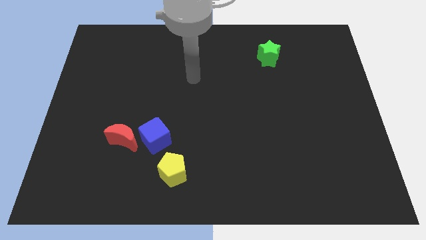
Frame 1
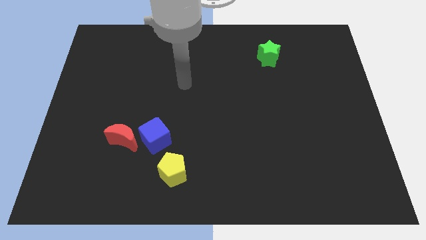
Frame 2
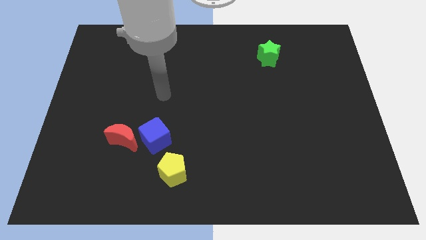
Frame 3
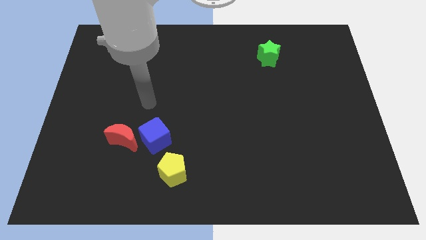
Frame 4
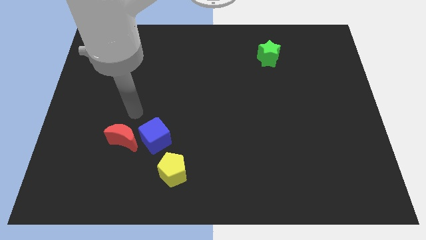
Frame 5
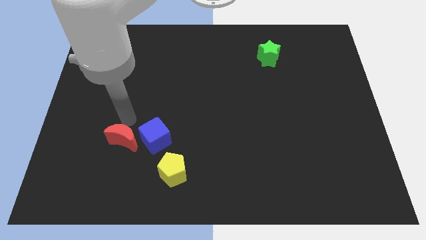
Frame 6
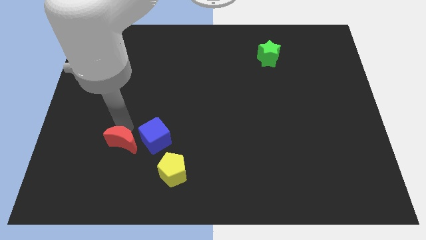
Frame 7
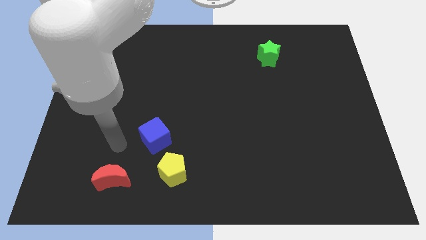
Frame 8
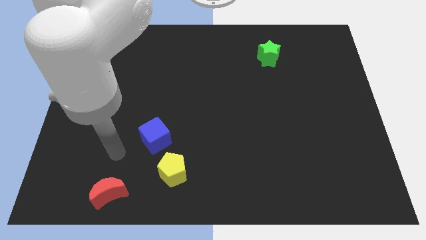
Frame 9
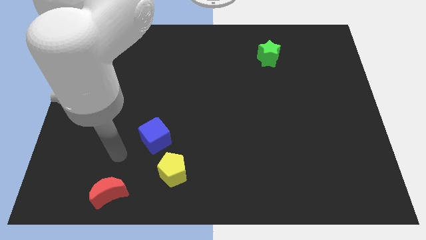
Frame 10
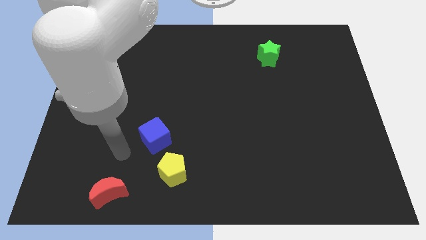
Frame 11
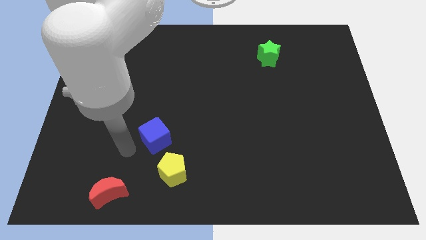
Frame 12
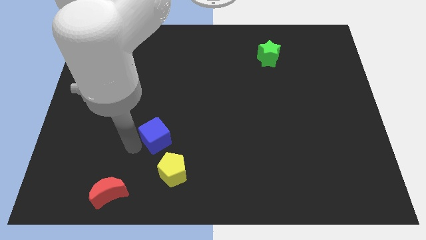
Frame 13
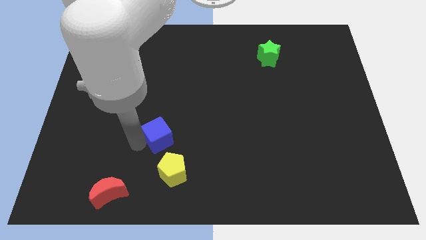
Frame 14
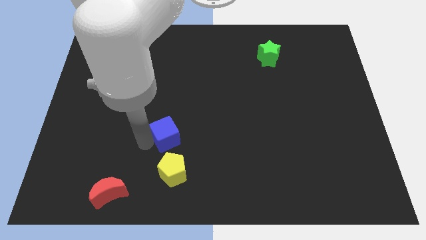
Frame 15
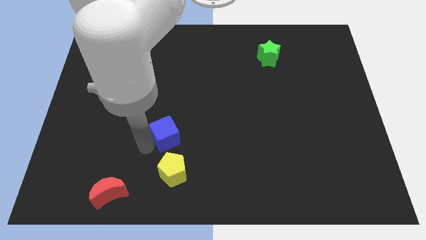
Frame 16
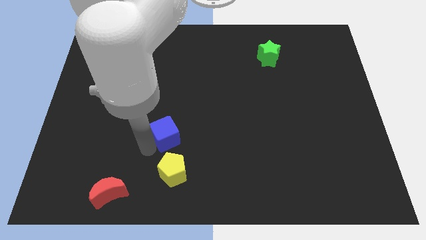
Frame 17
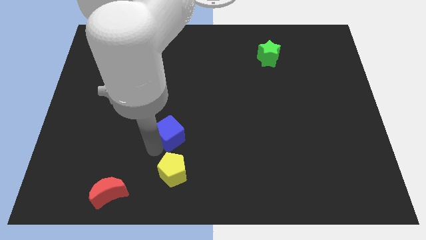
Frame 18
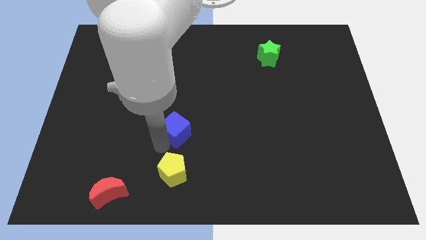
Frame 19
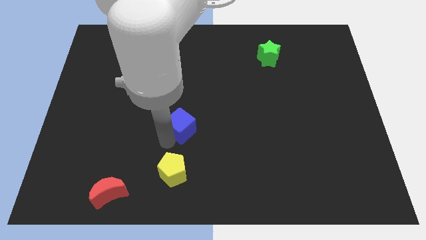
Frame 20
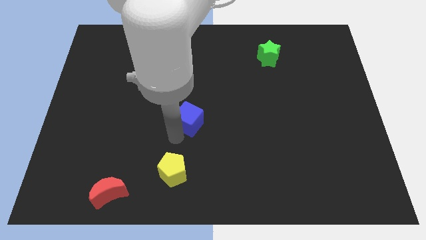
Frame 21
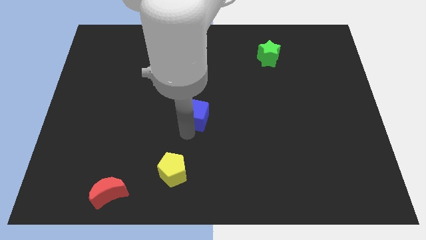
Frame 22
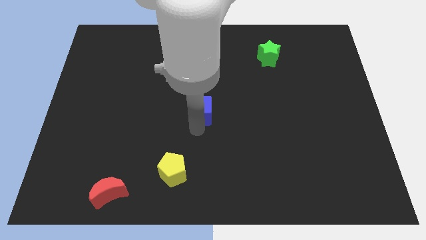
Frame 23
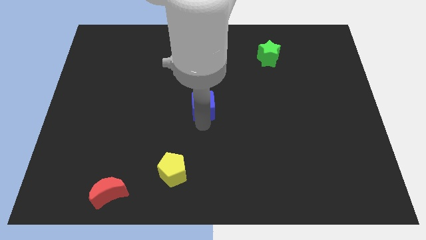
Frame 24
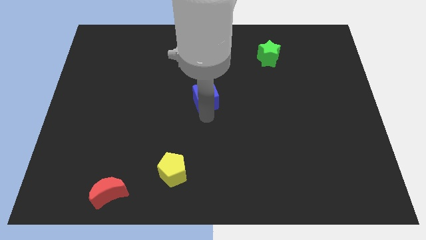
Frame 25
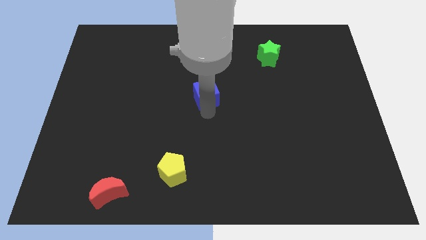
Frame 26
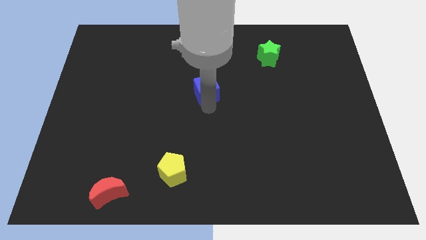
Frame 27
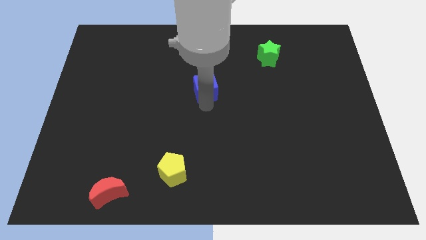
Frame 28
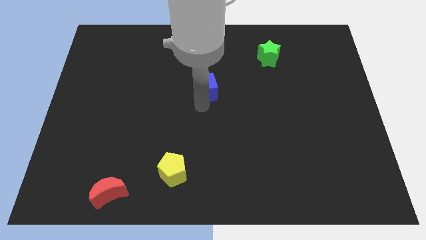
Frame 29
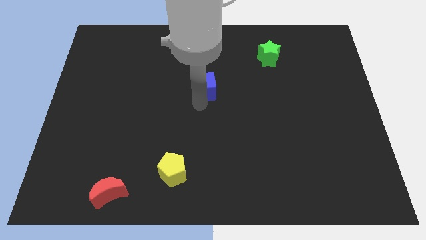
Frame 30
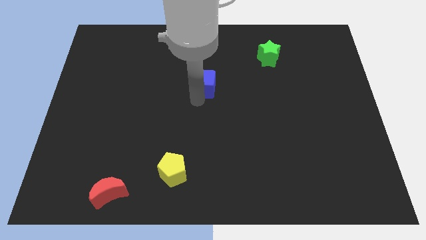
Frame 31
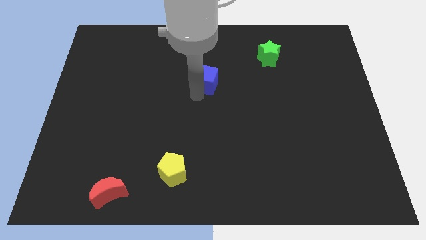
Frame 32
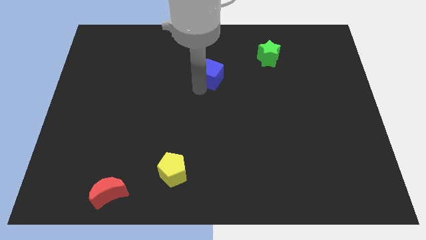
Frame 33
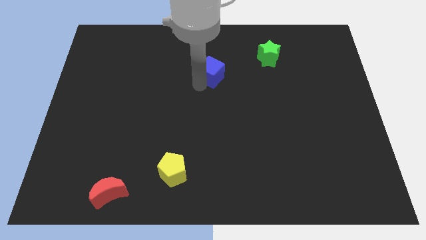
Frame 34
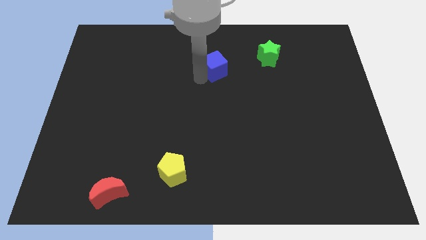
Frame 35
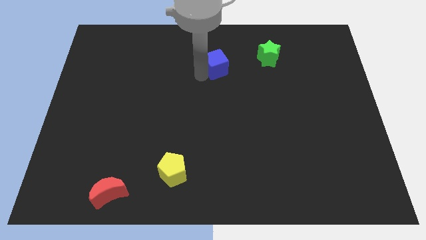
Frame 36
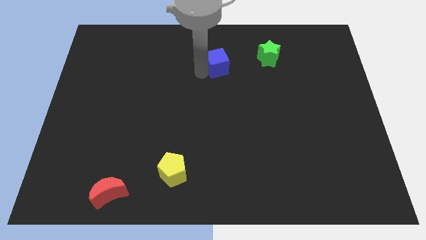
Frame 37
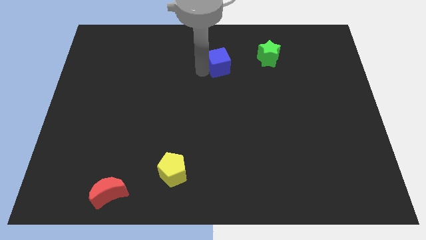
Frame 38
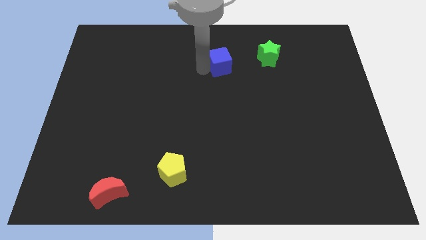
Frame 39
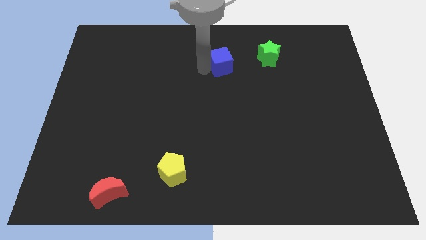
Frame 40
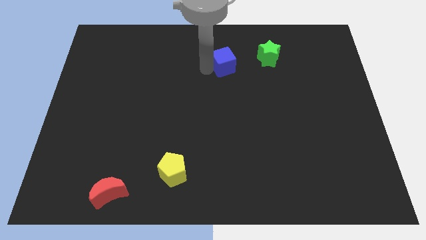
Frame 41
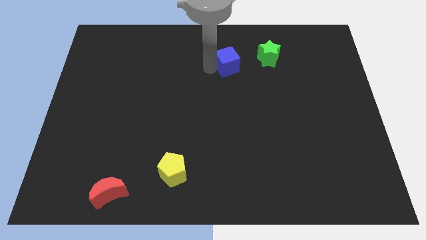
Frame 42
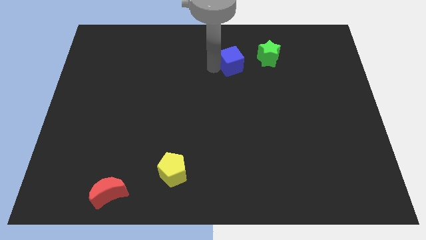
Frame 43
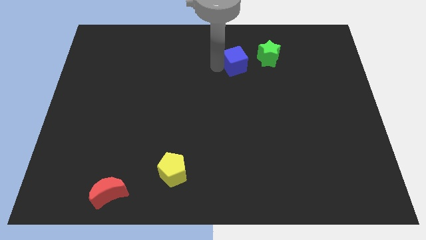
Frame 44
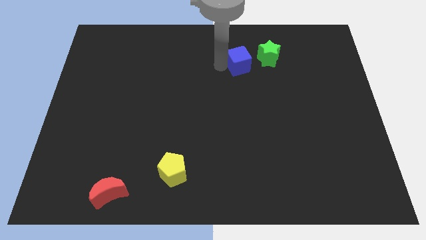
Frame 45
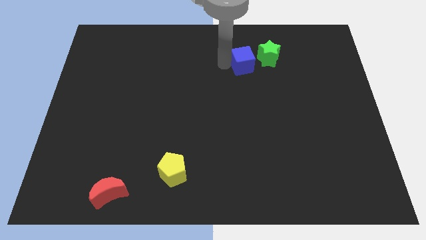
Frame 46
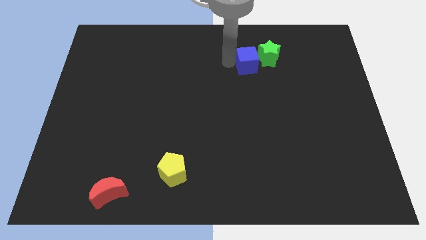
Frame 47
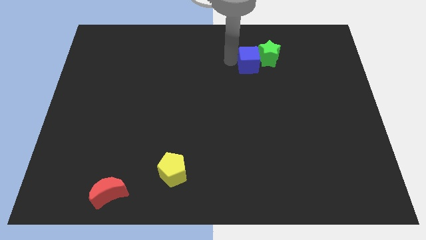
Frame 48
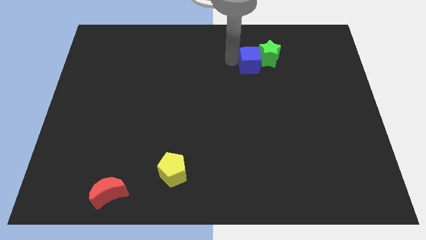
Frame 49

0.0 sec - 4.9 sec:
put the blue block next to the star

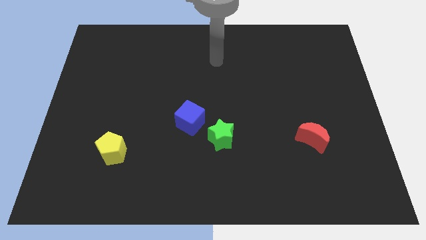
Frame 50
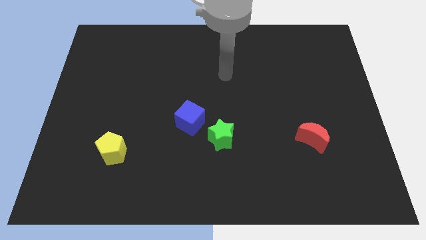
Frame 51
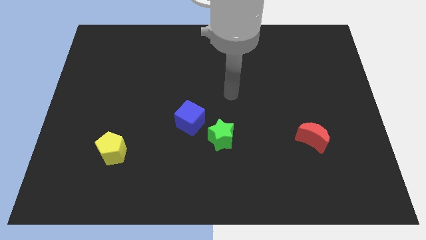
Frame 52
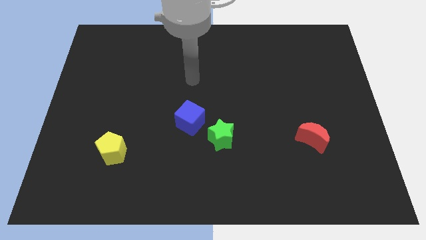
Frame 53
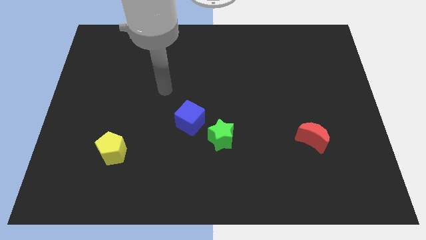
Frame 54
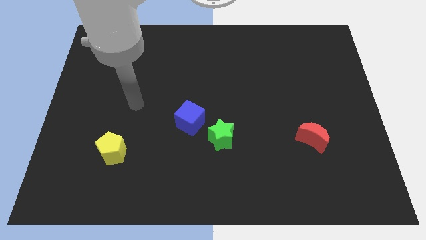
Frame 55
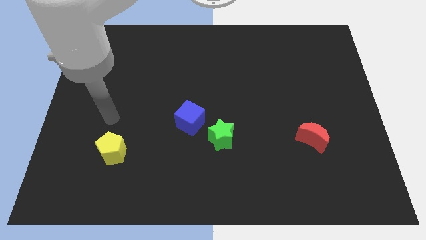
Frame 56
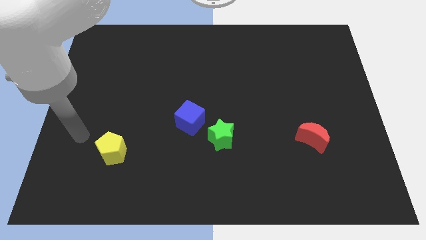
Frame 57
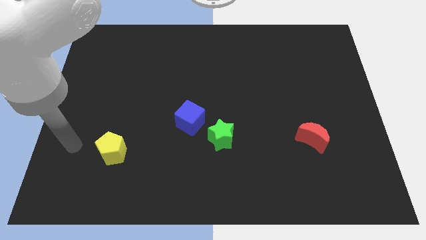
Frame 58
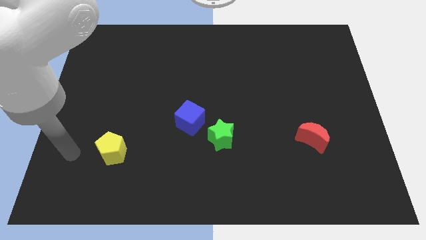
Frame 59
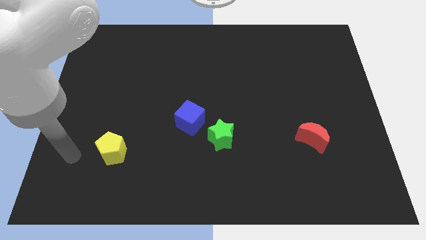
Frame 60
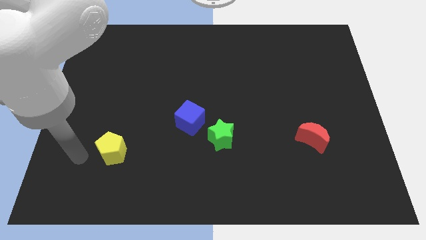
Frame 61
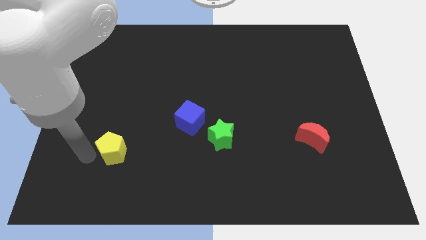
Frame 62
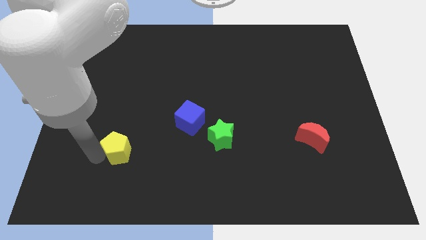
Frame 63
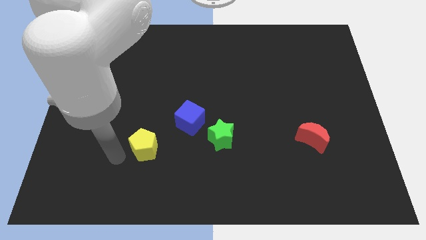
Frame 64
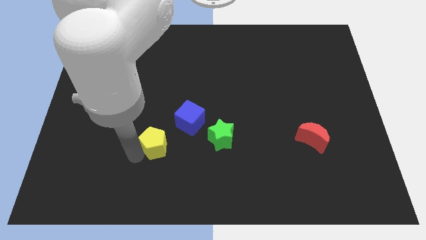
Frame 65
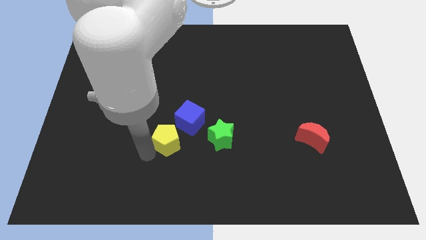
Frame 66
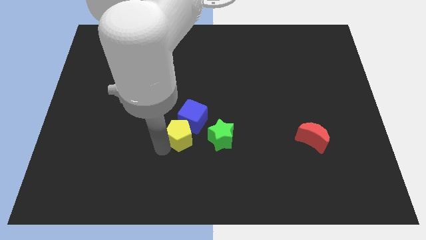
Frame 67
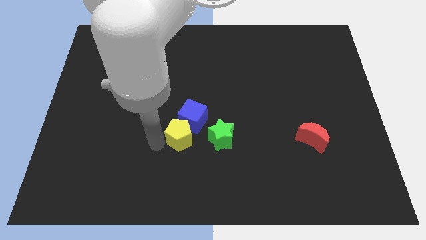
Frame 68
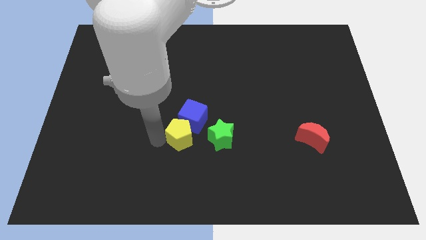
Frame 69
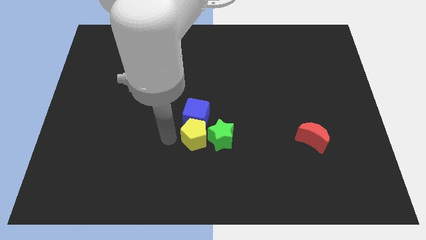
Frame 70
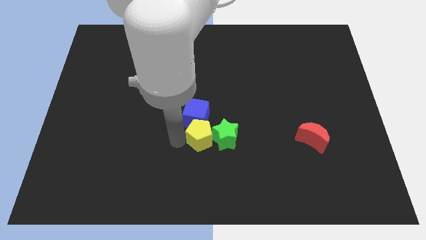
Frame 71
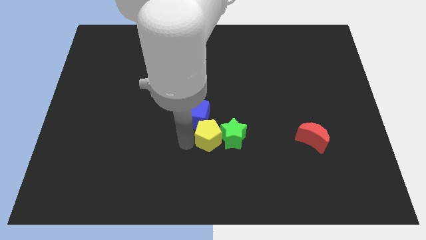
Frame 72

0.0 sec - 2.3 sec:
move the pentagon to the green star

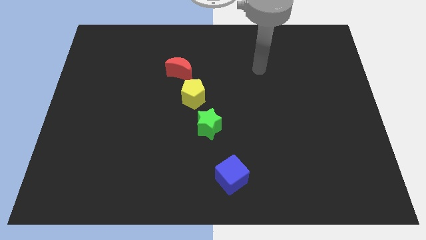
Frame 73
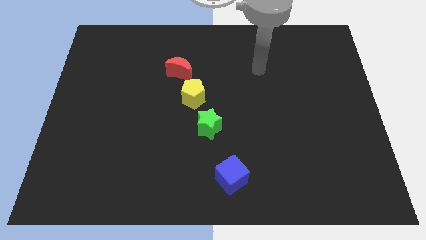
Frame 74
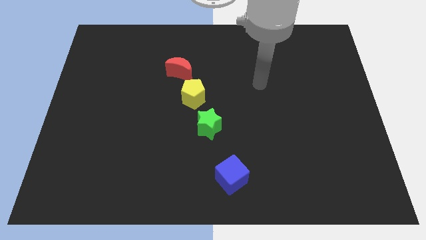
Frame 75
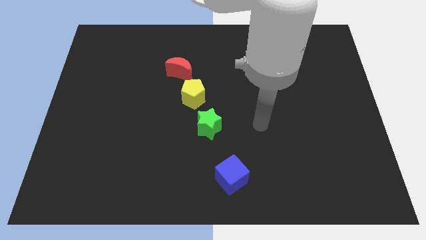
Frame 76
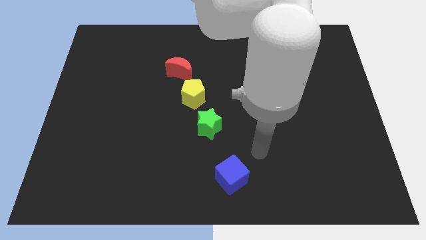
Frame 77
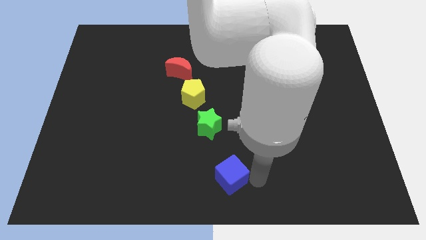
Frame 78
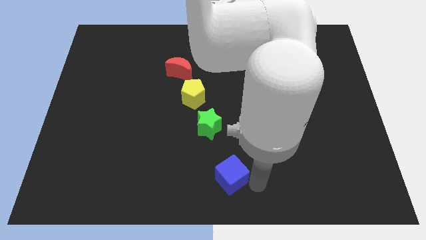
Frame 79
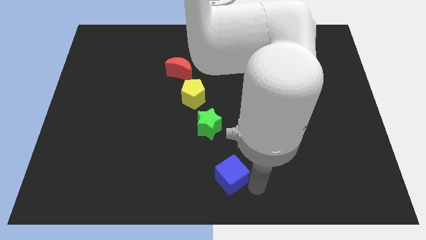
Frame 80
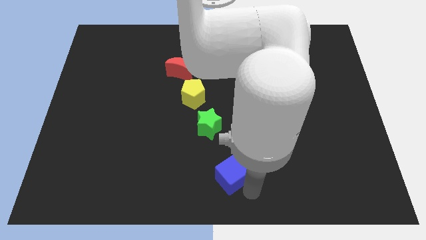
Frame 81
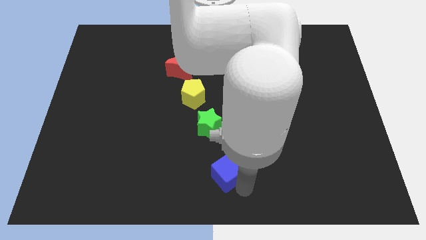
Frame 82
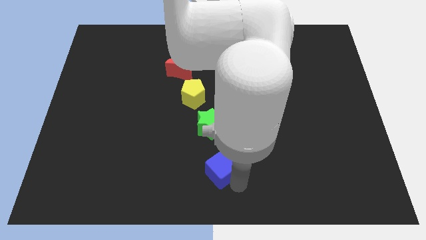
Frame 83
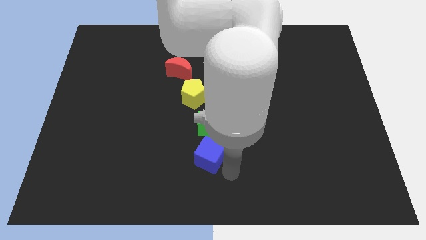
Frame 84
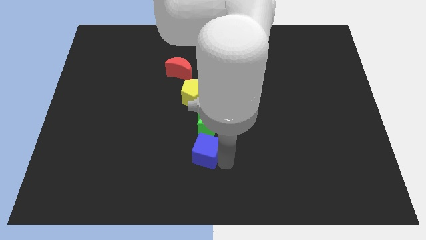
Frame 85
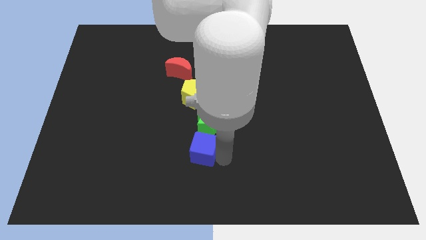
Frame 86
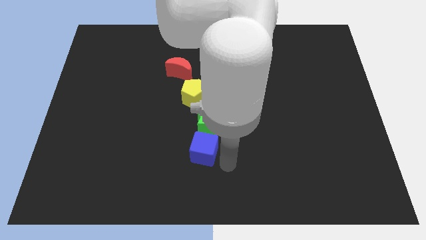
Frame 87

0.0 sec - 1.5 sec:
push the blue block next to the star
